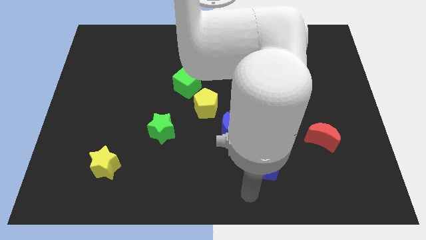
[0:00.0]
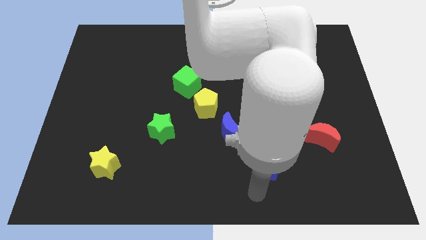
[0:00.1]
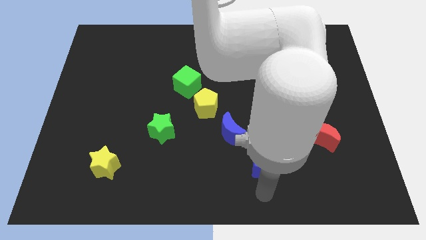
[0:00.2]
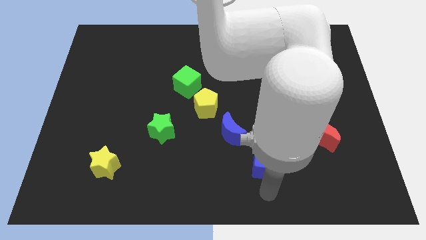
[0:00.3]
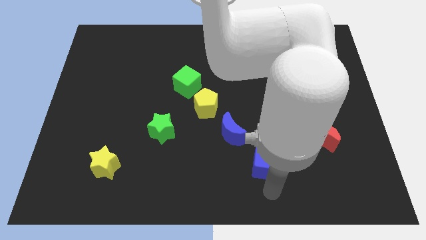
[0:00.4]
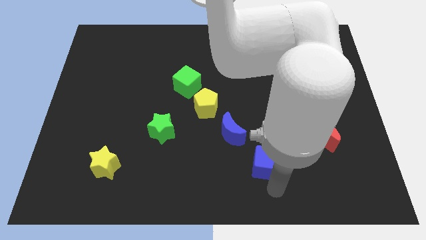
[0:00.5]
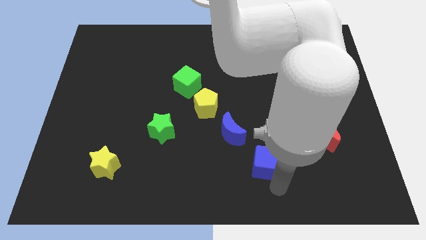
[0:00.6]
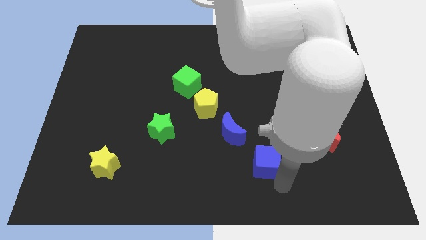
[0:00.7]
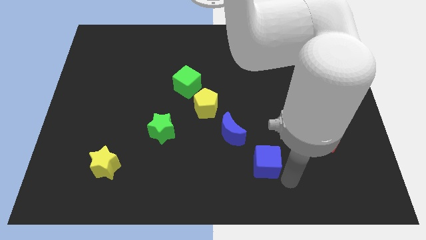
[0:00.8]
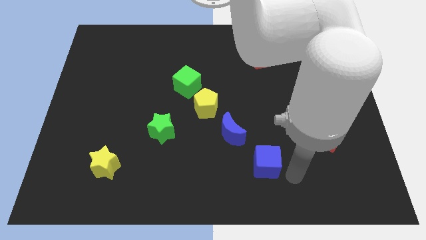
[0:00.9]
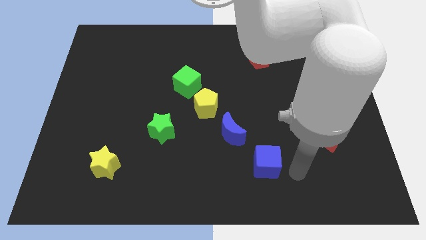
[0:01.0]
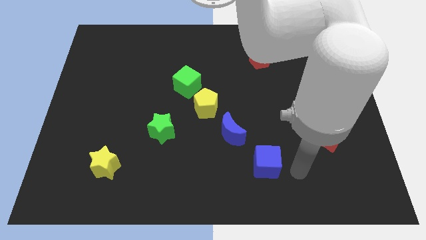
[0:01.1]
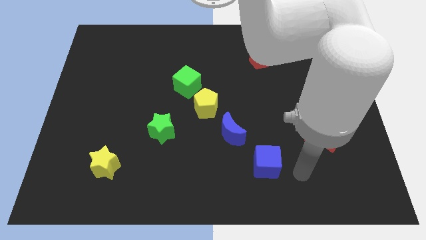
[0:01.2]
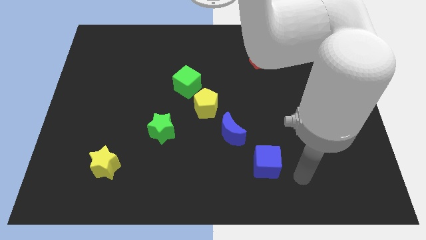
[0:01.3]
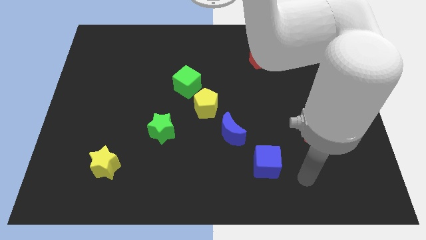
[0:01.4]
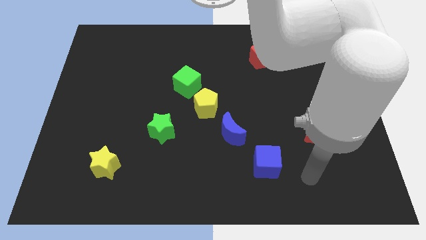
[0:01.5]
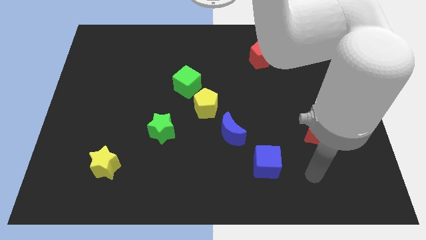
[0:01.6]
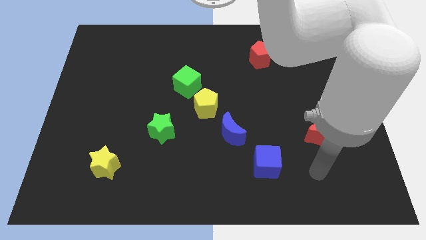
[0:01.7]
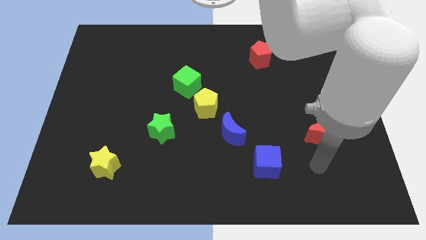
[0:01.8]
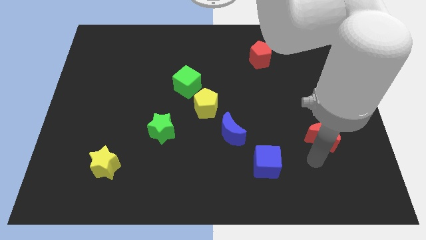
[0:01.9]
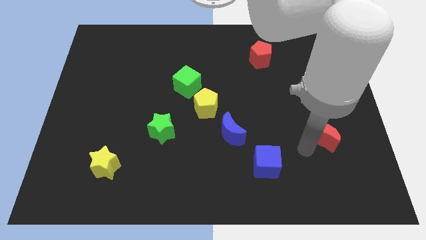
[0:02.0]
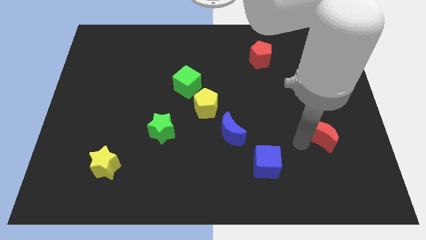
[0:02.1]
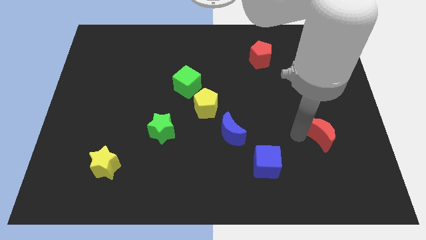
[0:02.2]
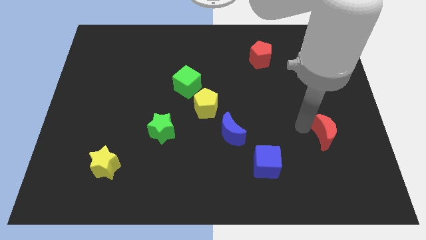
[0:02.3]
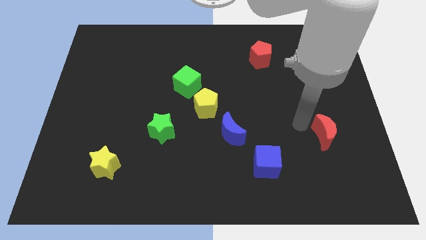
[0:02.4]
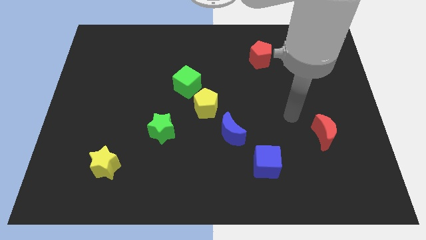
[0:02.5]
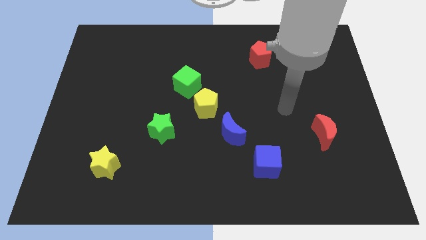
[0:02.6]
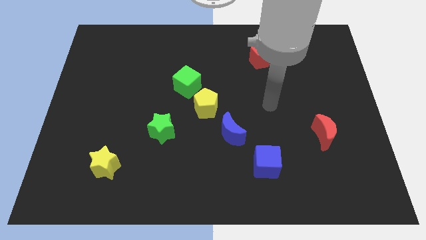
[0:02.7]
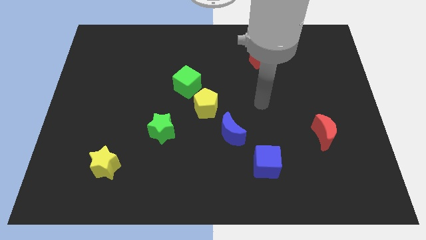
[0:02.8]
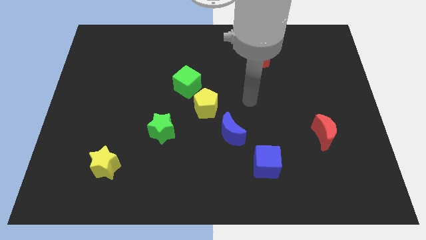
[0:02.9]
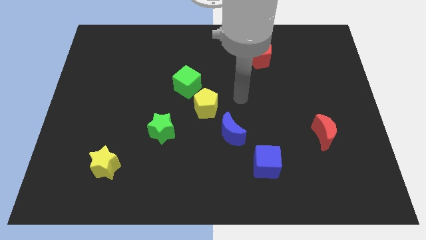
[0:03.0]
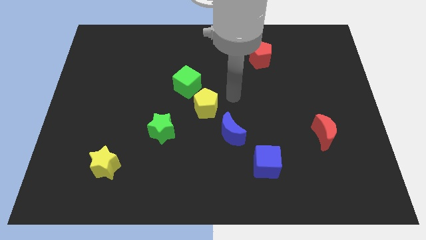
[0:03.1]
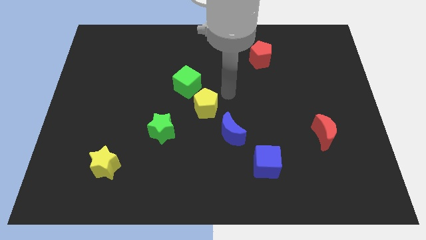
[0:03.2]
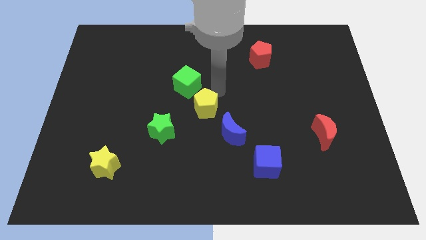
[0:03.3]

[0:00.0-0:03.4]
slide the blue cube and red pentagon towards the top side of the board

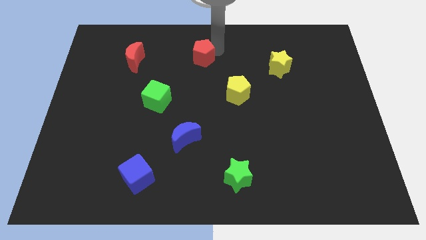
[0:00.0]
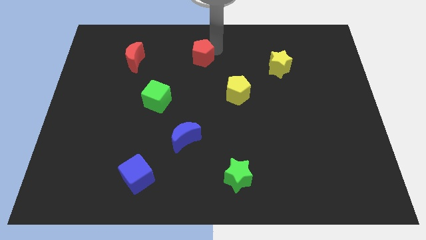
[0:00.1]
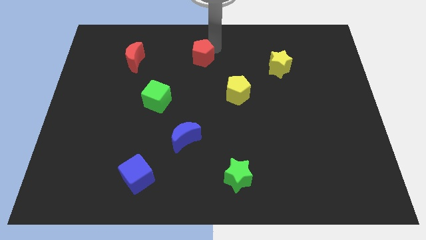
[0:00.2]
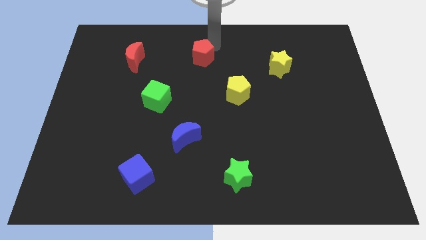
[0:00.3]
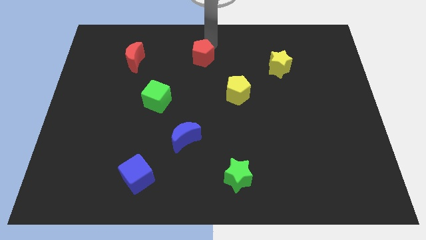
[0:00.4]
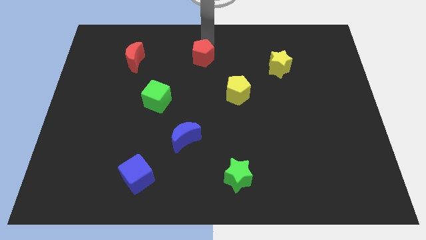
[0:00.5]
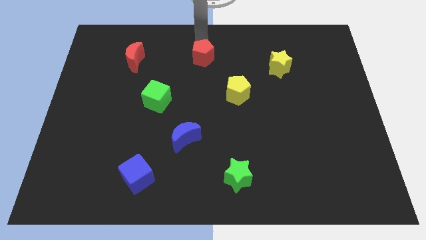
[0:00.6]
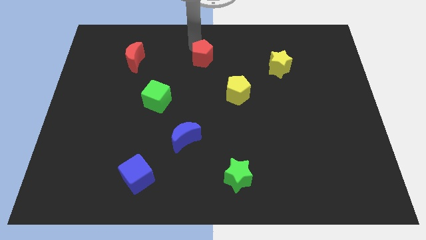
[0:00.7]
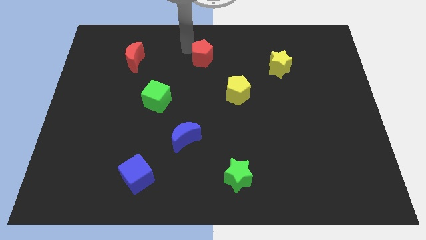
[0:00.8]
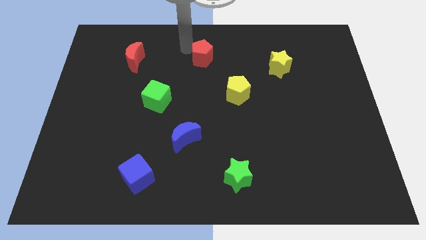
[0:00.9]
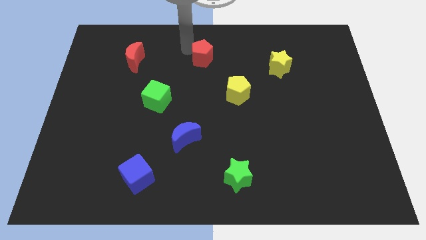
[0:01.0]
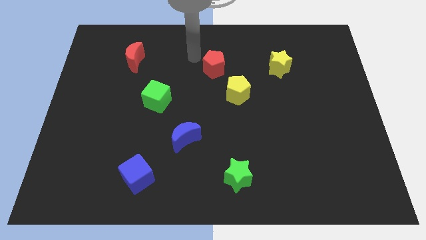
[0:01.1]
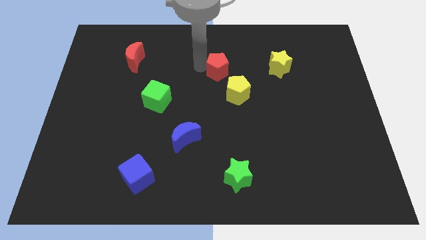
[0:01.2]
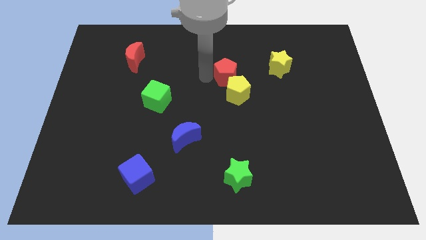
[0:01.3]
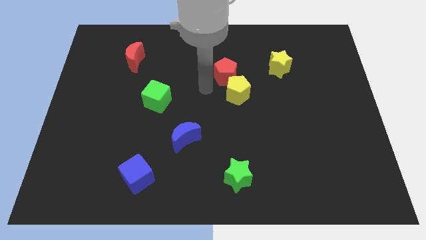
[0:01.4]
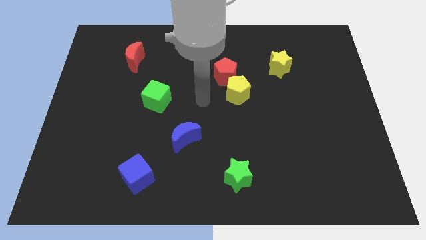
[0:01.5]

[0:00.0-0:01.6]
push the red pentagon into the yellow pentagon

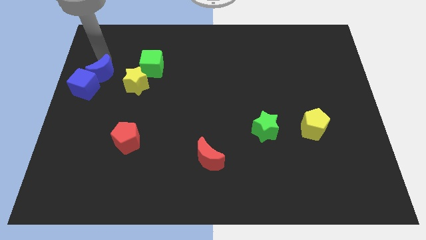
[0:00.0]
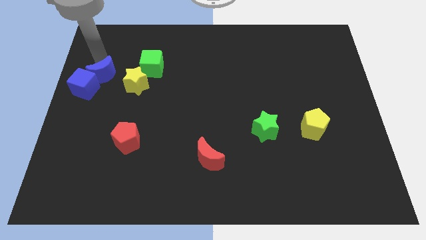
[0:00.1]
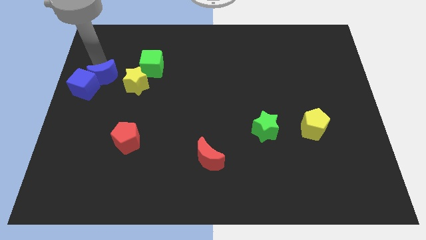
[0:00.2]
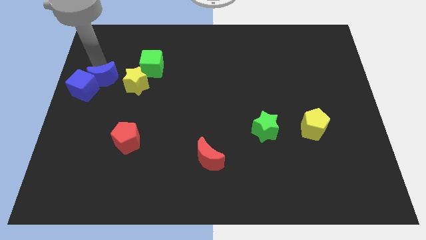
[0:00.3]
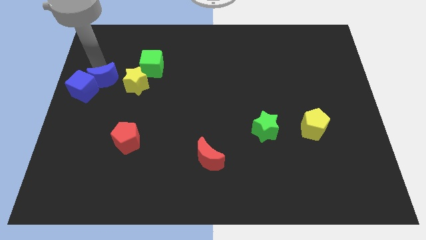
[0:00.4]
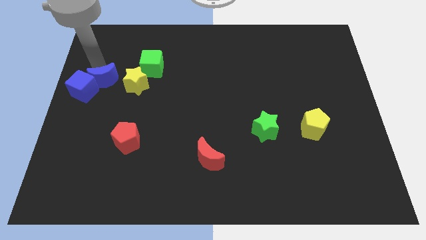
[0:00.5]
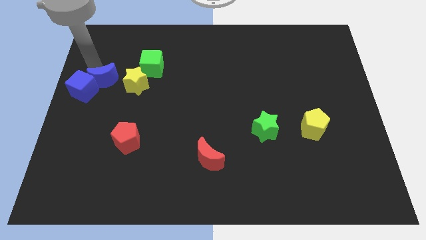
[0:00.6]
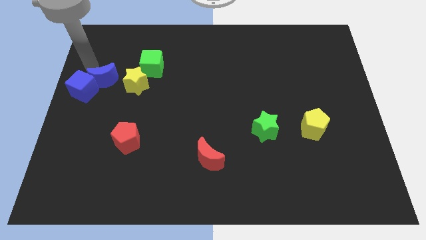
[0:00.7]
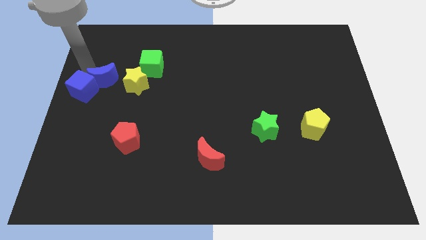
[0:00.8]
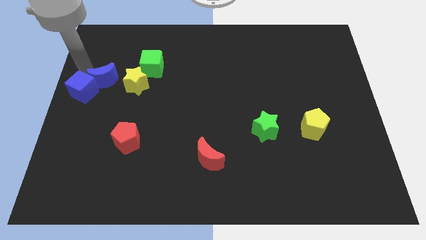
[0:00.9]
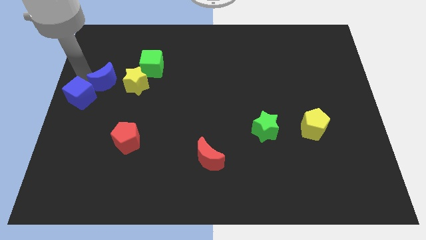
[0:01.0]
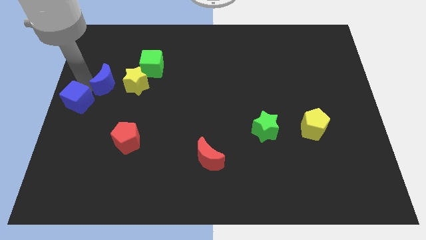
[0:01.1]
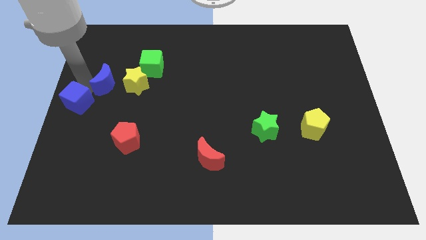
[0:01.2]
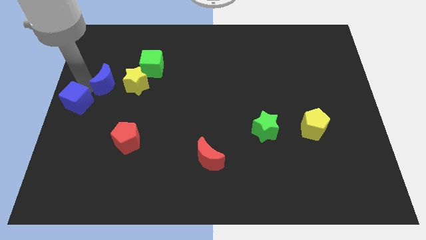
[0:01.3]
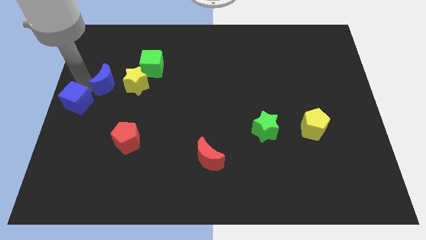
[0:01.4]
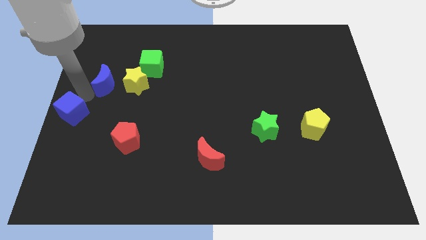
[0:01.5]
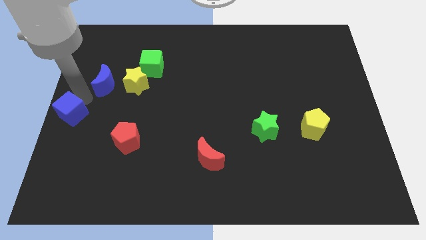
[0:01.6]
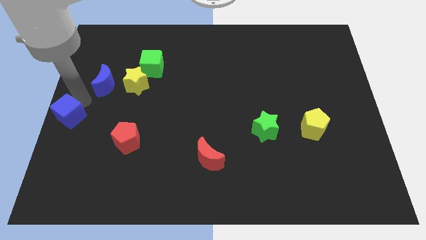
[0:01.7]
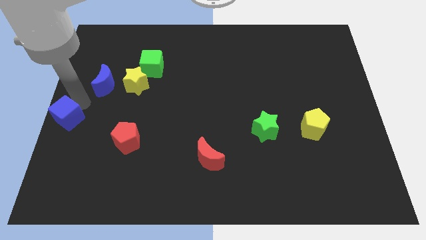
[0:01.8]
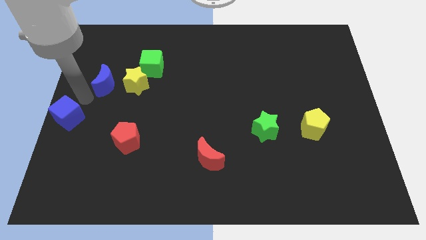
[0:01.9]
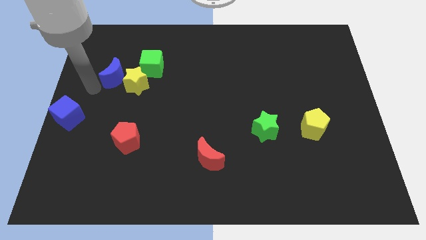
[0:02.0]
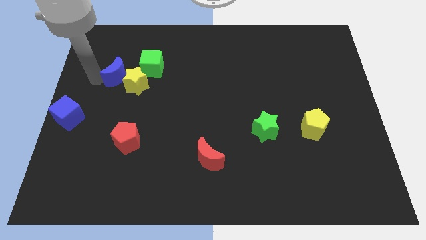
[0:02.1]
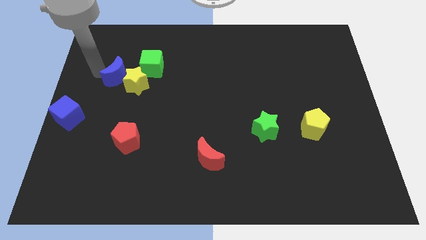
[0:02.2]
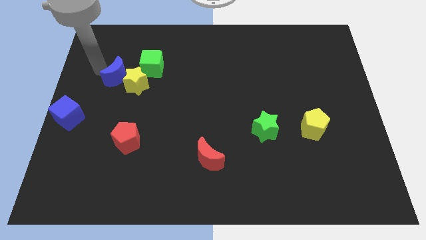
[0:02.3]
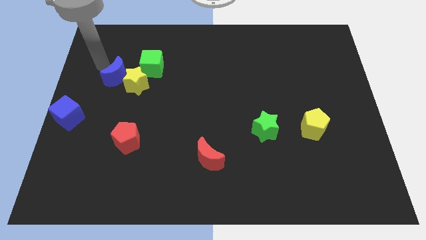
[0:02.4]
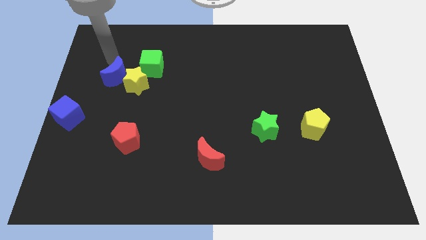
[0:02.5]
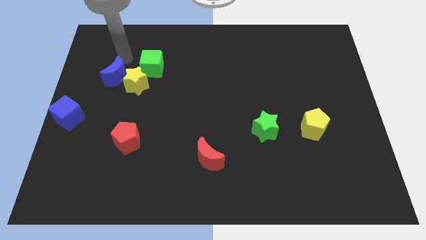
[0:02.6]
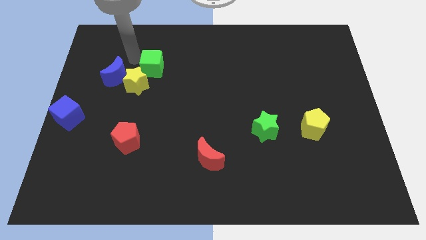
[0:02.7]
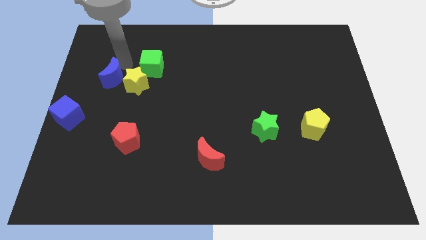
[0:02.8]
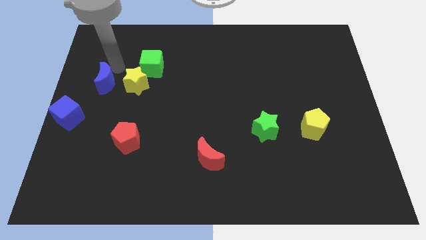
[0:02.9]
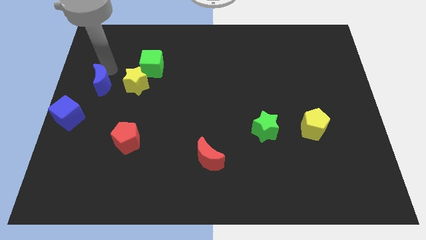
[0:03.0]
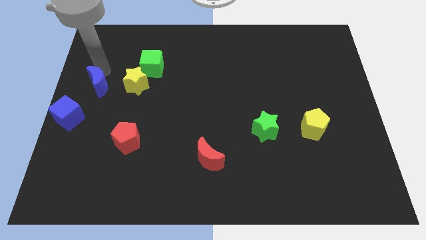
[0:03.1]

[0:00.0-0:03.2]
move the blue cube towards the center left

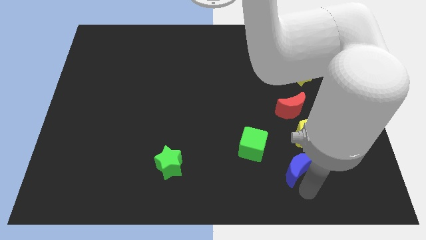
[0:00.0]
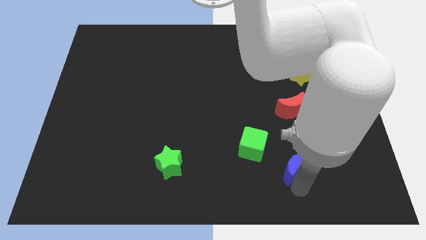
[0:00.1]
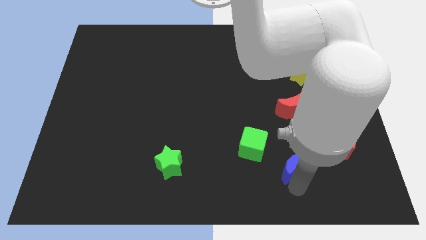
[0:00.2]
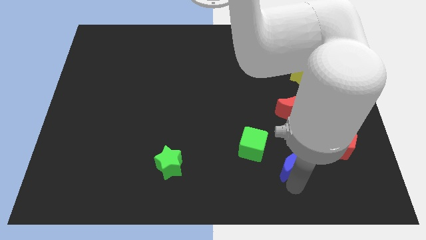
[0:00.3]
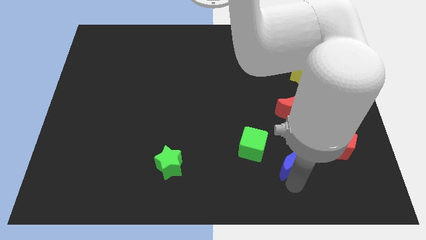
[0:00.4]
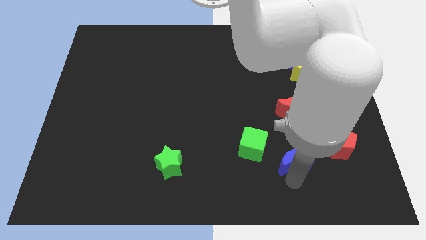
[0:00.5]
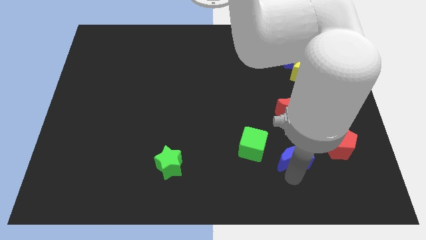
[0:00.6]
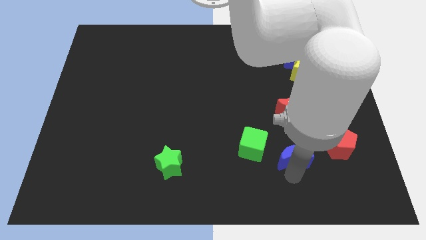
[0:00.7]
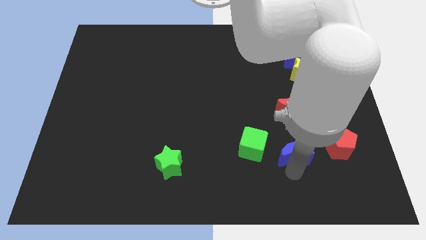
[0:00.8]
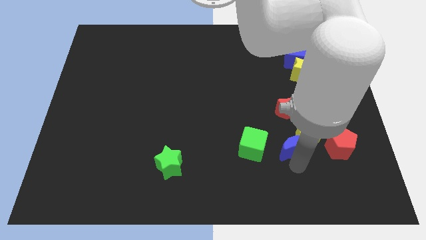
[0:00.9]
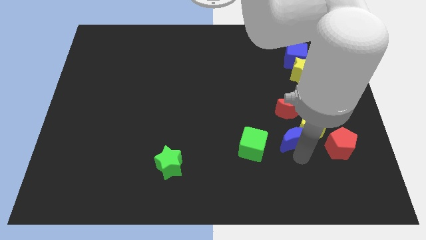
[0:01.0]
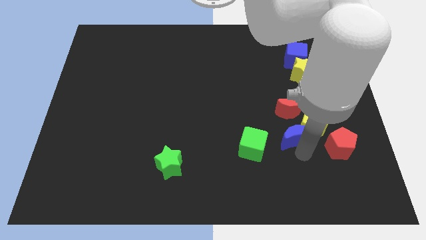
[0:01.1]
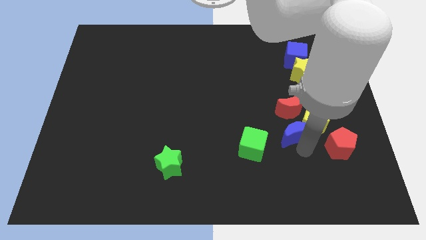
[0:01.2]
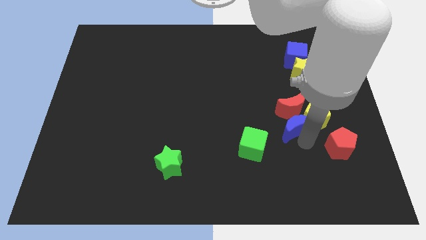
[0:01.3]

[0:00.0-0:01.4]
push the blue crescent into the yellow pentagon
